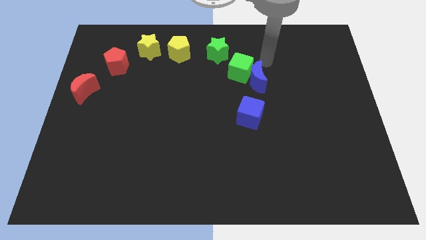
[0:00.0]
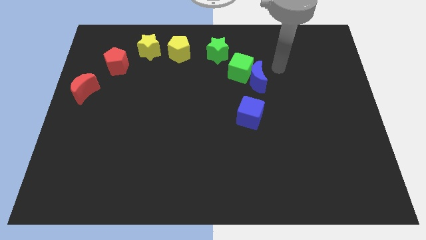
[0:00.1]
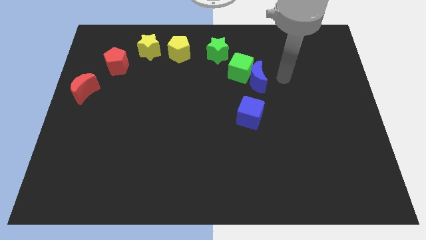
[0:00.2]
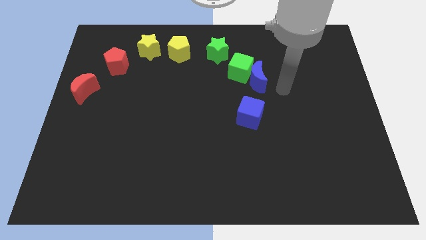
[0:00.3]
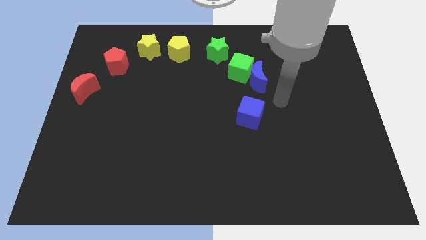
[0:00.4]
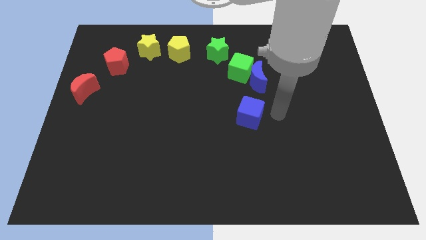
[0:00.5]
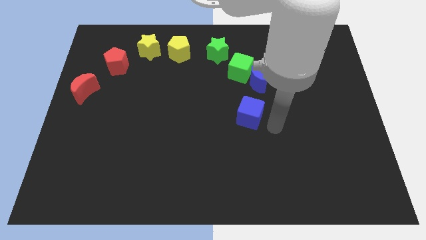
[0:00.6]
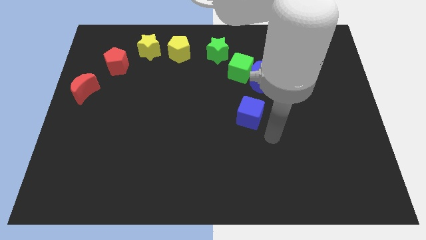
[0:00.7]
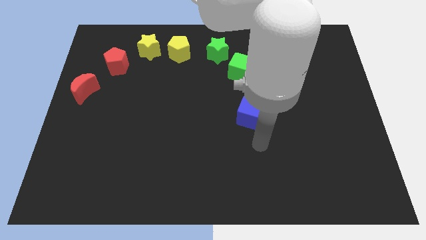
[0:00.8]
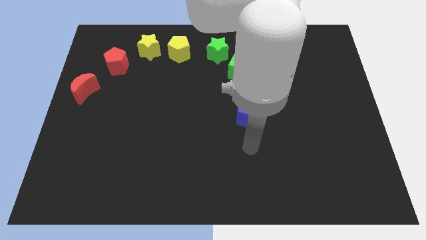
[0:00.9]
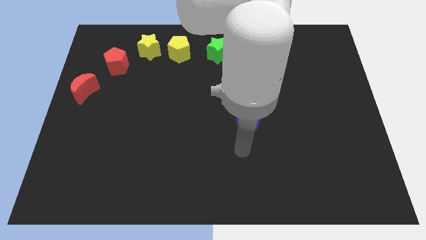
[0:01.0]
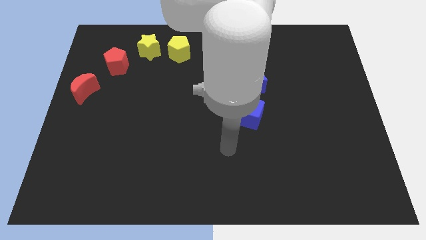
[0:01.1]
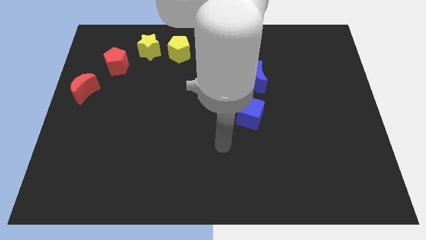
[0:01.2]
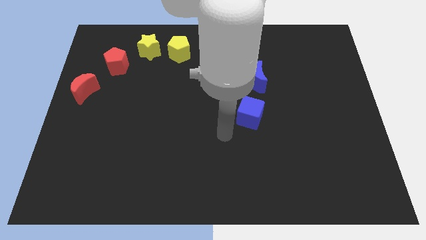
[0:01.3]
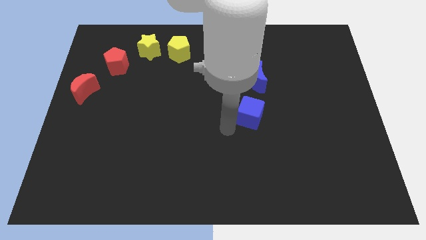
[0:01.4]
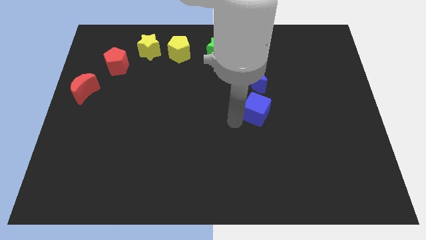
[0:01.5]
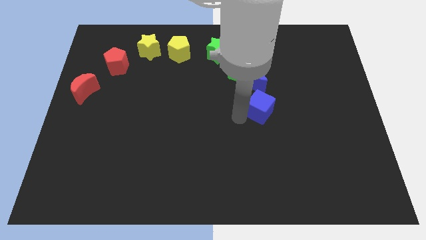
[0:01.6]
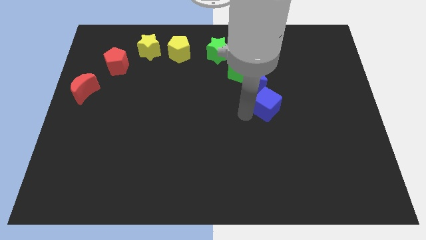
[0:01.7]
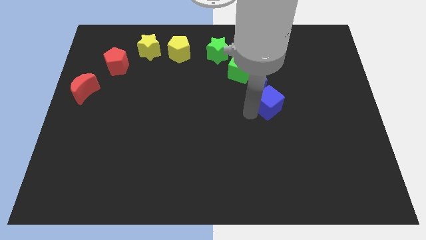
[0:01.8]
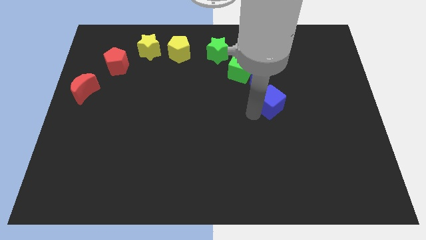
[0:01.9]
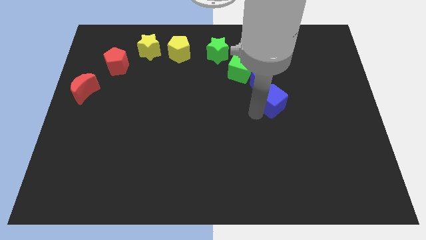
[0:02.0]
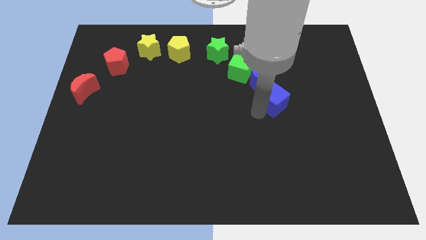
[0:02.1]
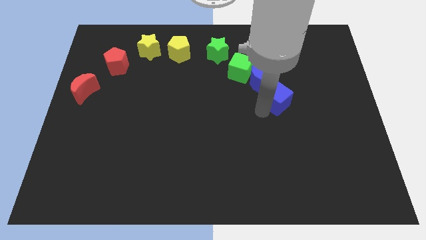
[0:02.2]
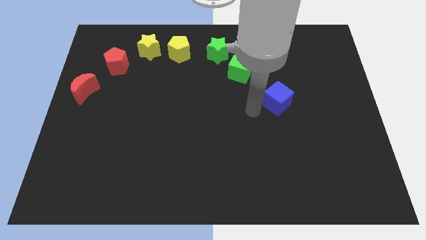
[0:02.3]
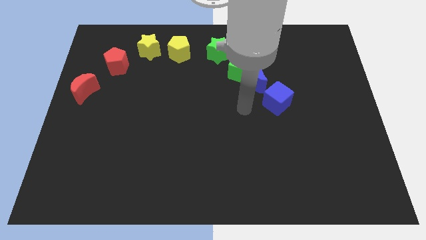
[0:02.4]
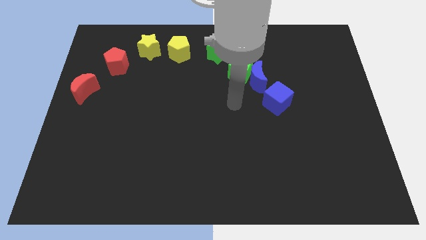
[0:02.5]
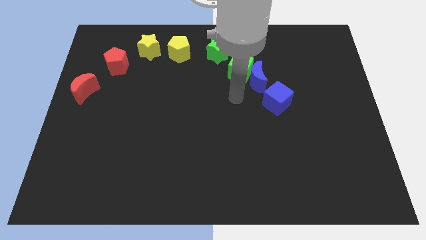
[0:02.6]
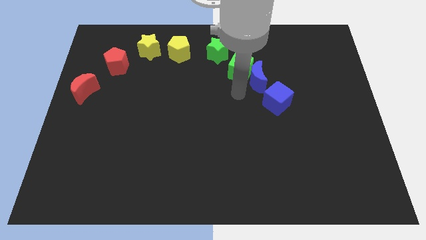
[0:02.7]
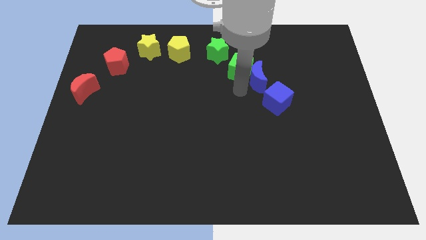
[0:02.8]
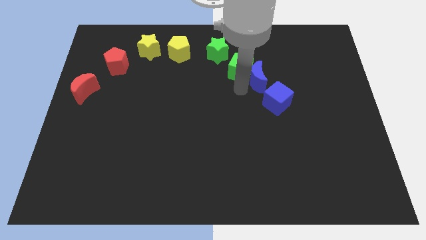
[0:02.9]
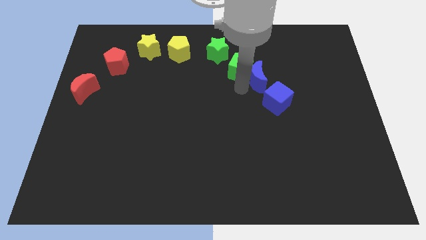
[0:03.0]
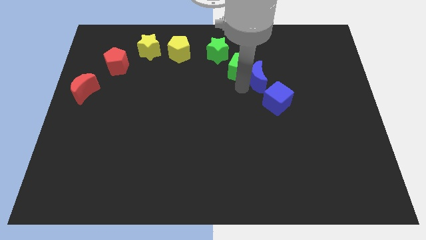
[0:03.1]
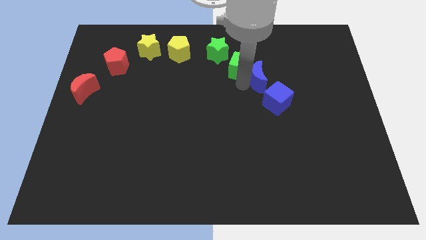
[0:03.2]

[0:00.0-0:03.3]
move the blue cube to the bottom right side of the blue crescent

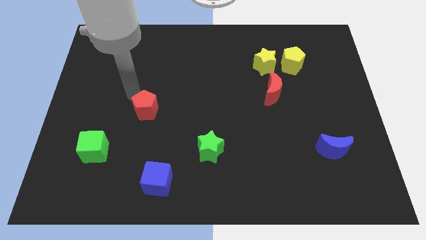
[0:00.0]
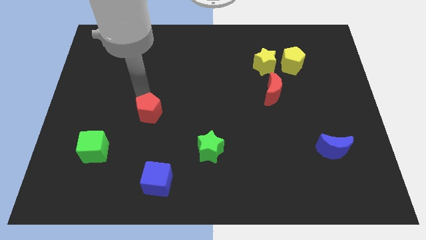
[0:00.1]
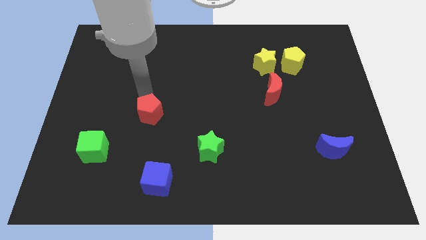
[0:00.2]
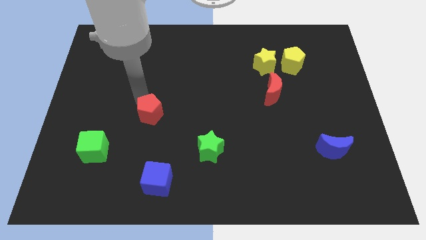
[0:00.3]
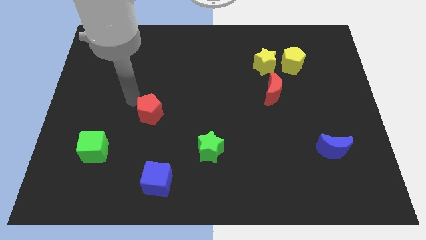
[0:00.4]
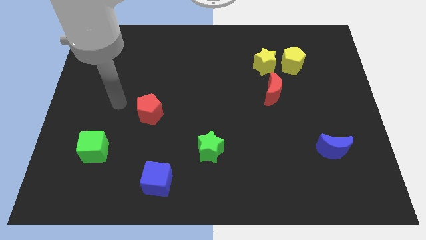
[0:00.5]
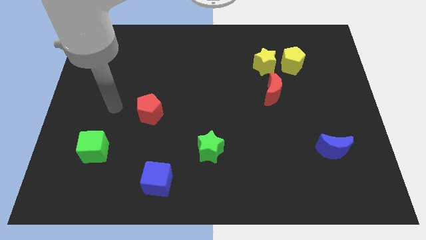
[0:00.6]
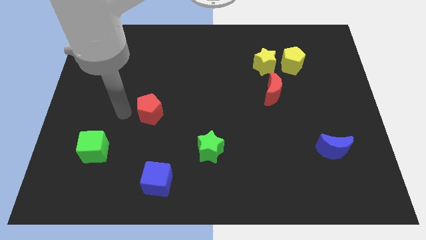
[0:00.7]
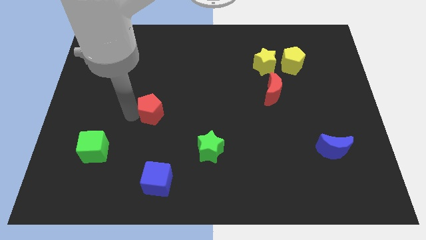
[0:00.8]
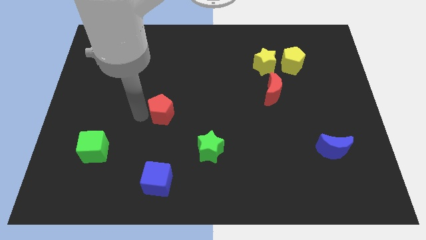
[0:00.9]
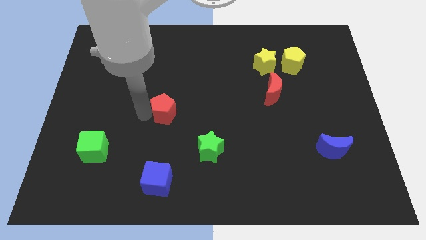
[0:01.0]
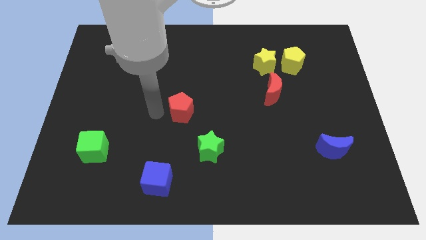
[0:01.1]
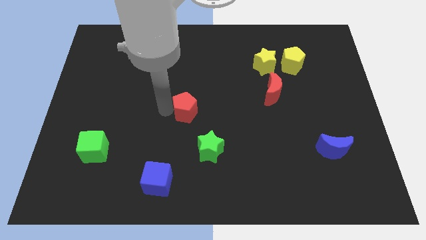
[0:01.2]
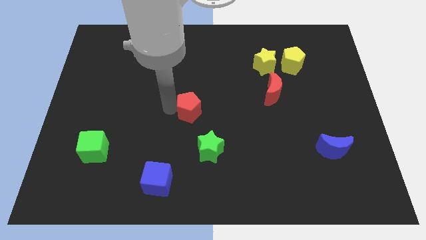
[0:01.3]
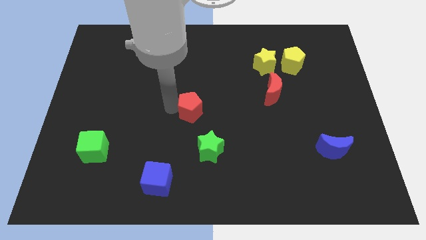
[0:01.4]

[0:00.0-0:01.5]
push the red pentagon to the top left of the green star

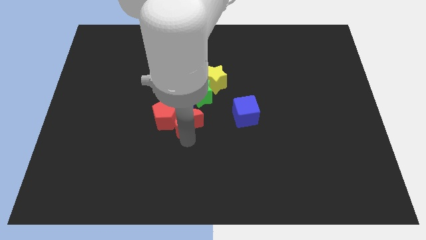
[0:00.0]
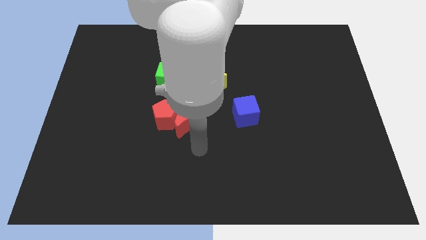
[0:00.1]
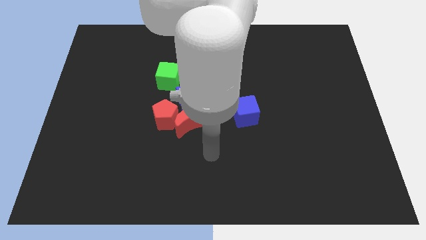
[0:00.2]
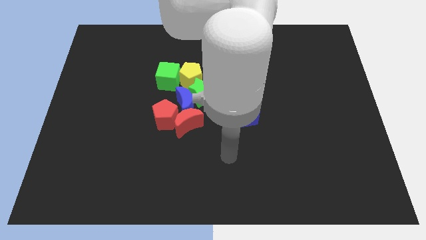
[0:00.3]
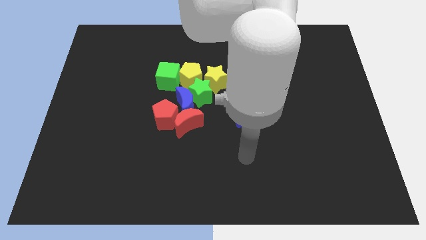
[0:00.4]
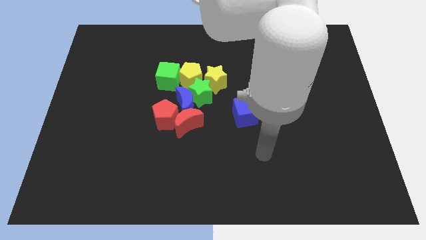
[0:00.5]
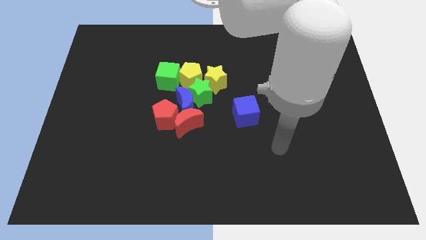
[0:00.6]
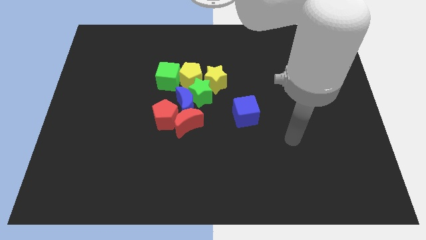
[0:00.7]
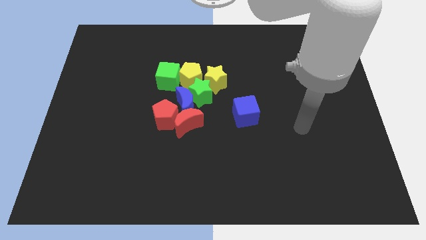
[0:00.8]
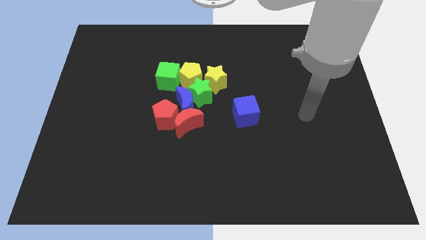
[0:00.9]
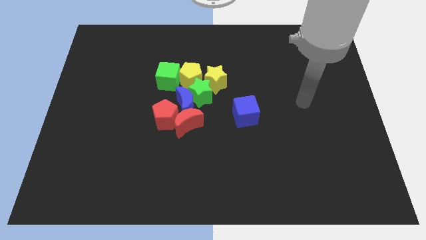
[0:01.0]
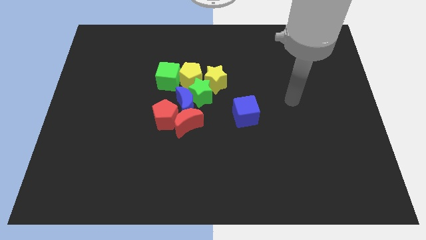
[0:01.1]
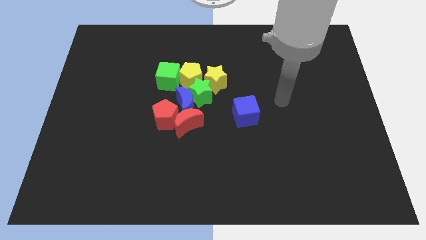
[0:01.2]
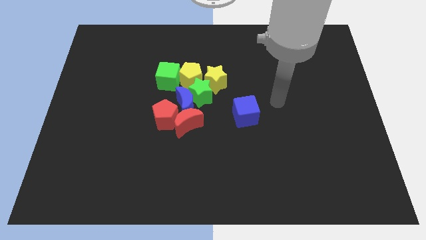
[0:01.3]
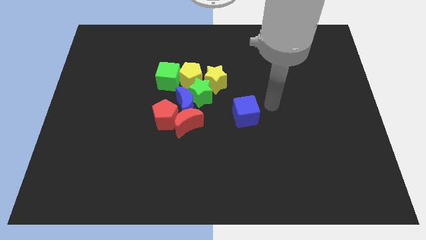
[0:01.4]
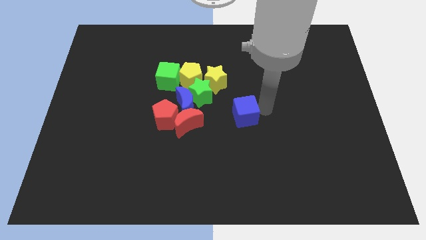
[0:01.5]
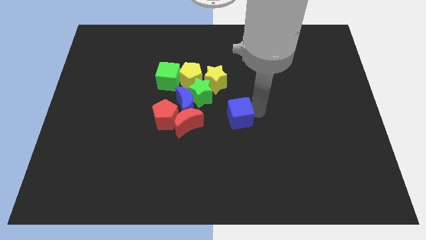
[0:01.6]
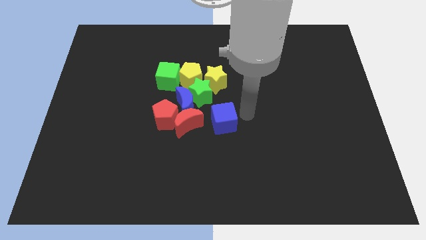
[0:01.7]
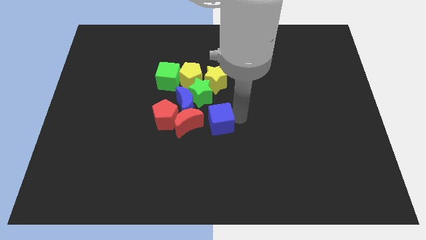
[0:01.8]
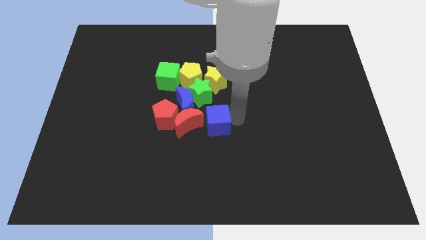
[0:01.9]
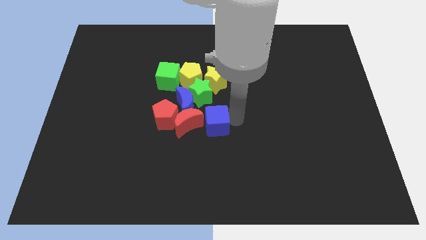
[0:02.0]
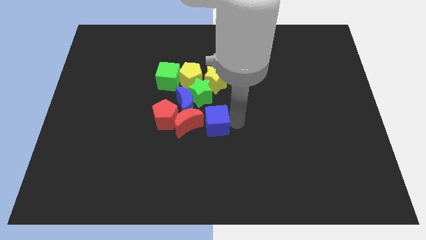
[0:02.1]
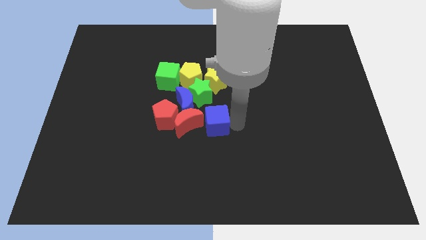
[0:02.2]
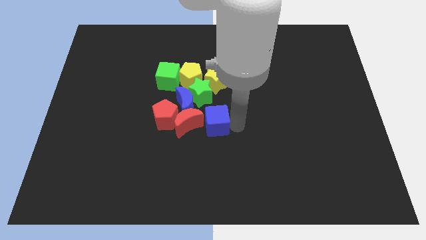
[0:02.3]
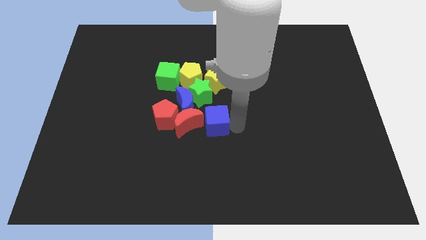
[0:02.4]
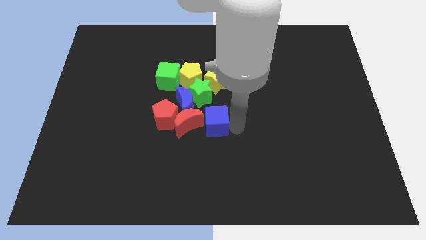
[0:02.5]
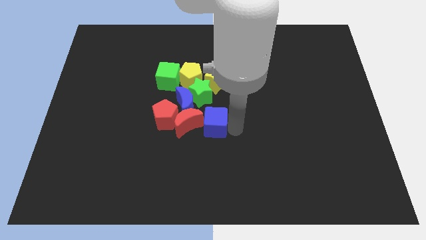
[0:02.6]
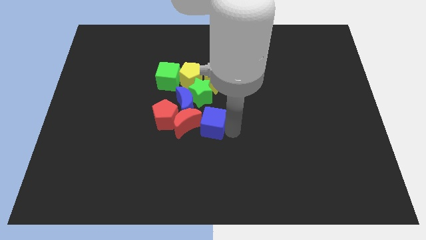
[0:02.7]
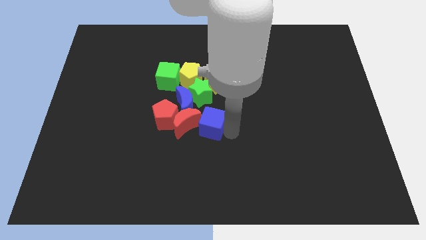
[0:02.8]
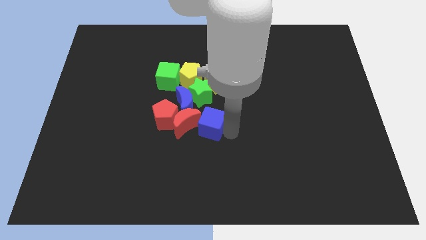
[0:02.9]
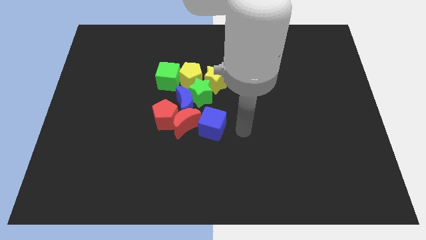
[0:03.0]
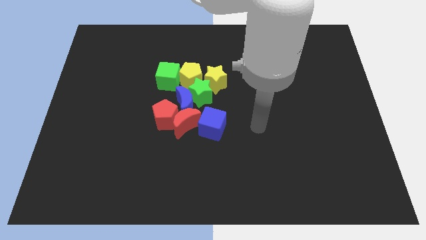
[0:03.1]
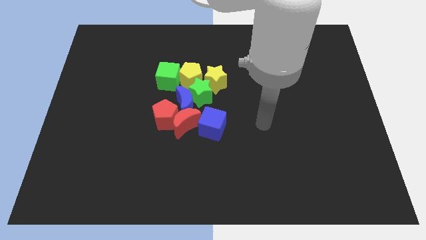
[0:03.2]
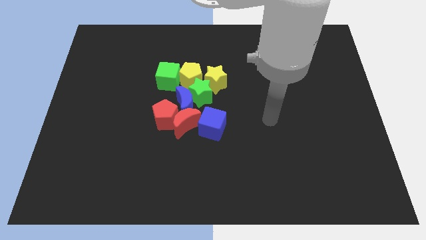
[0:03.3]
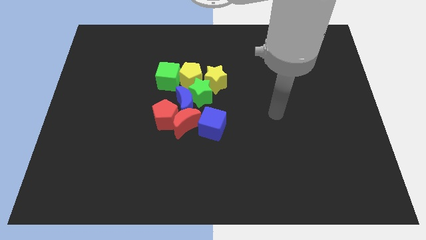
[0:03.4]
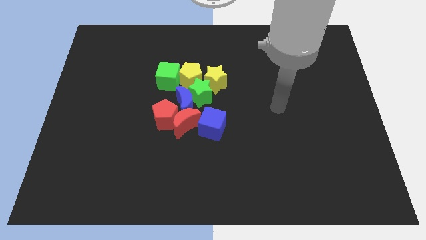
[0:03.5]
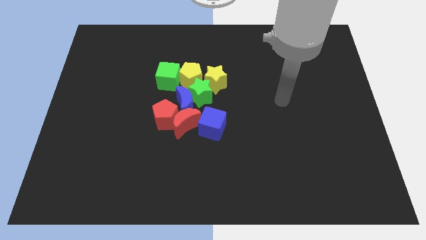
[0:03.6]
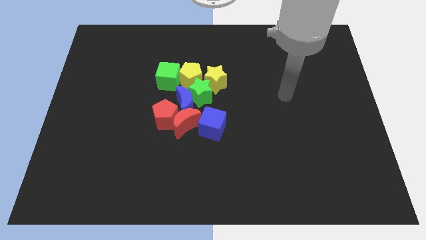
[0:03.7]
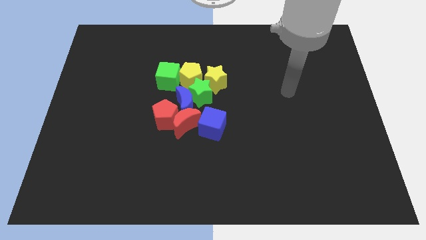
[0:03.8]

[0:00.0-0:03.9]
move the blue cube into the red crescent

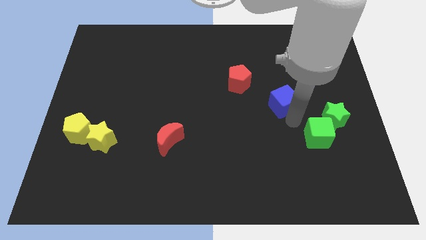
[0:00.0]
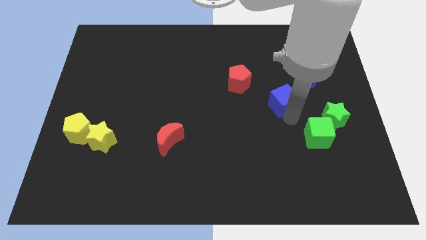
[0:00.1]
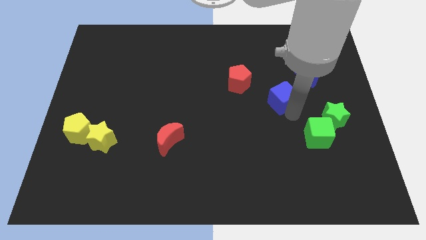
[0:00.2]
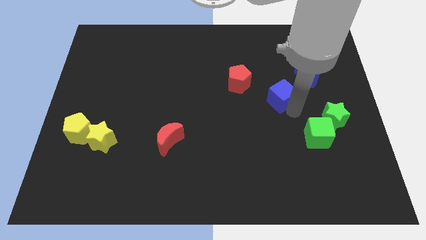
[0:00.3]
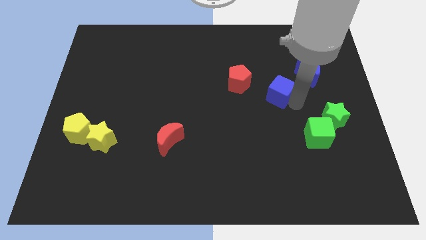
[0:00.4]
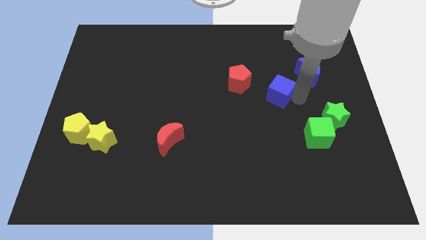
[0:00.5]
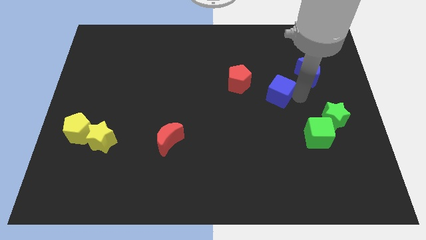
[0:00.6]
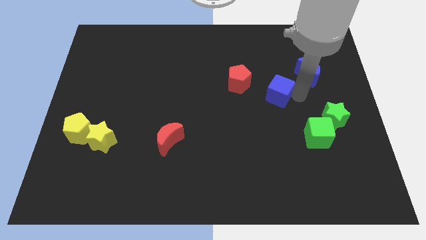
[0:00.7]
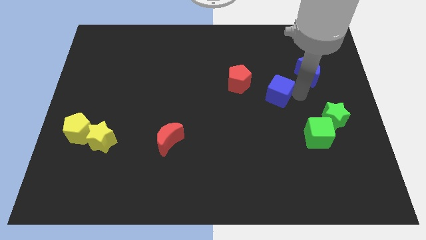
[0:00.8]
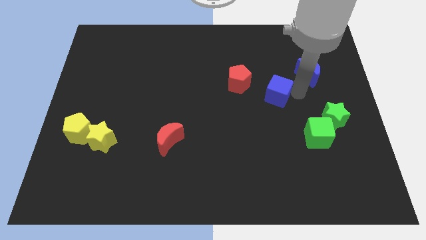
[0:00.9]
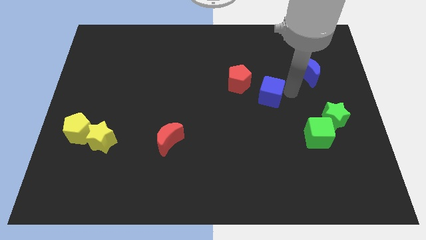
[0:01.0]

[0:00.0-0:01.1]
place the blue cube towards the bottom right side of the red pentagon
